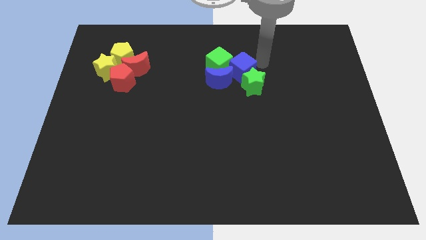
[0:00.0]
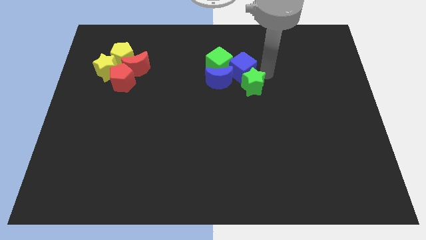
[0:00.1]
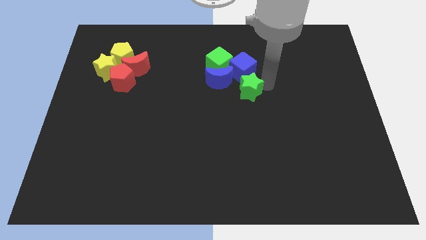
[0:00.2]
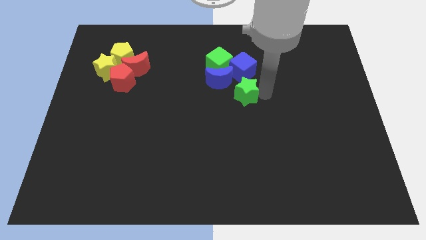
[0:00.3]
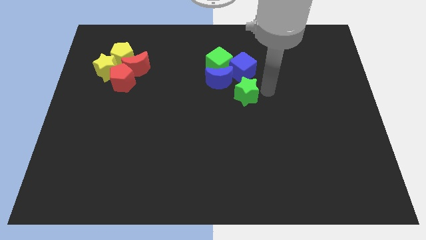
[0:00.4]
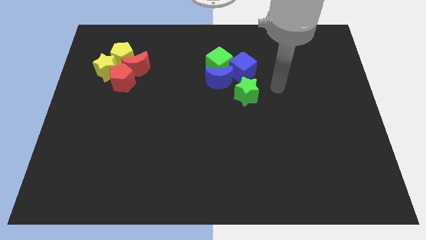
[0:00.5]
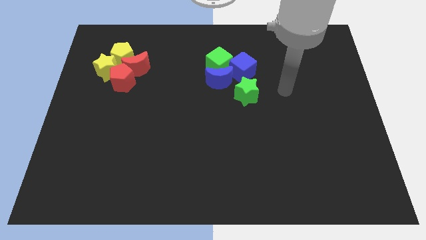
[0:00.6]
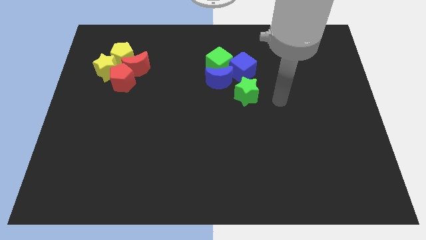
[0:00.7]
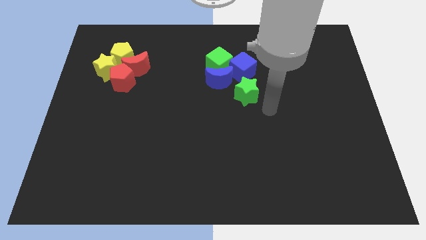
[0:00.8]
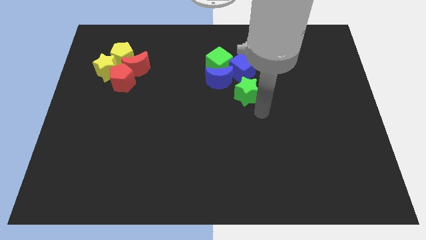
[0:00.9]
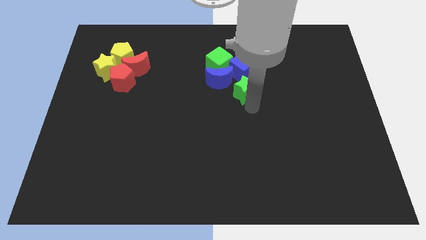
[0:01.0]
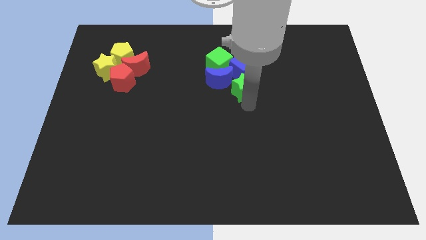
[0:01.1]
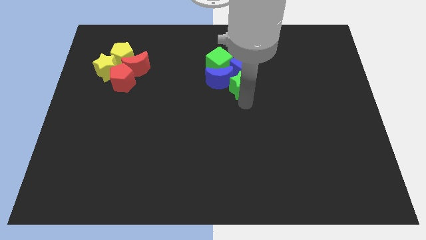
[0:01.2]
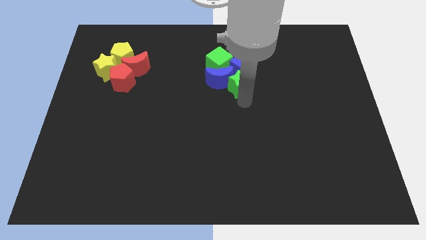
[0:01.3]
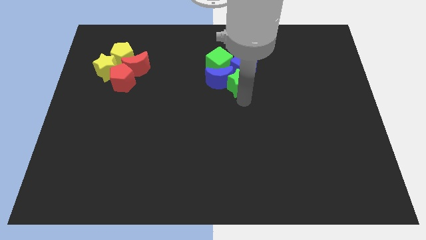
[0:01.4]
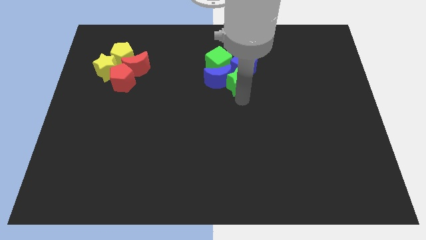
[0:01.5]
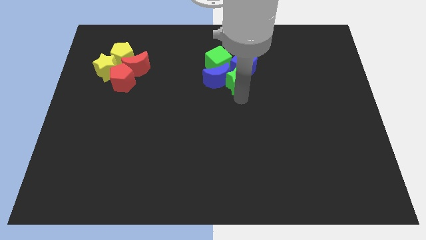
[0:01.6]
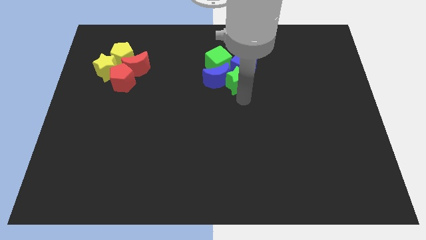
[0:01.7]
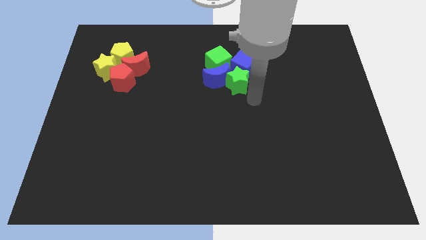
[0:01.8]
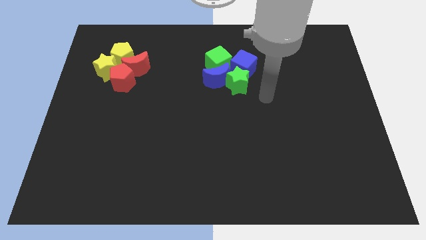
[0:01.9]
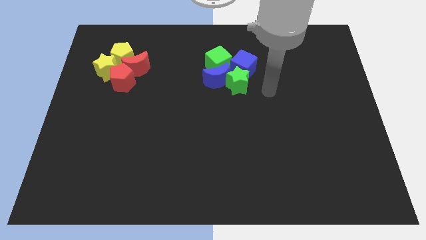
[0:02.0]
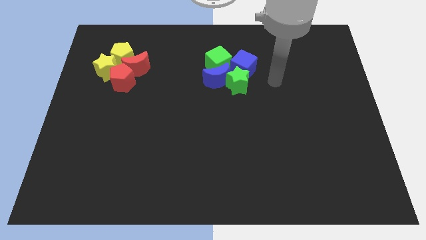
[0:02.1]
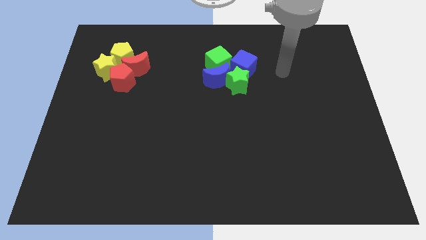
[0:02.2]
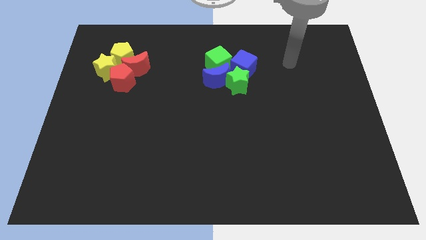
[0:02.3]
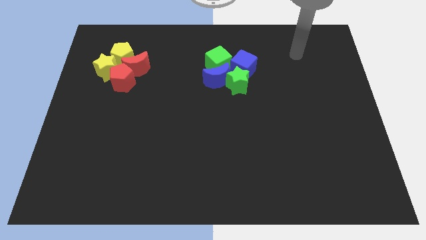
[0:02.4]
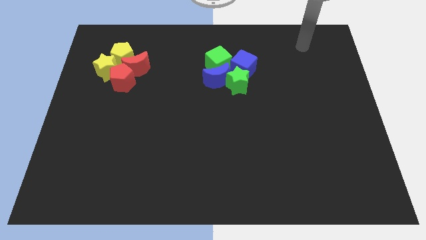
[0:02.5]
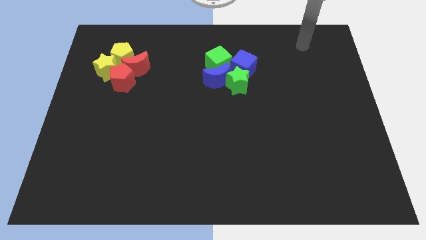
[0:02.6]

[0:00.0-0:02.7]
slightly move the green star to the bottom left of blue cube

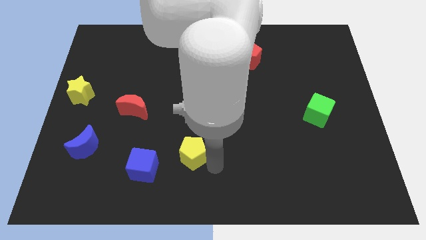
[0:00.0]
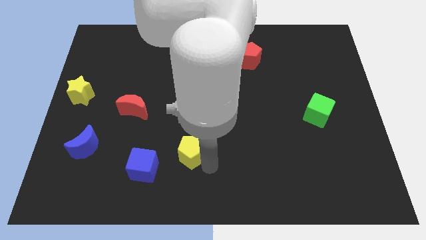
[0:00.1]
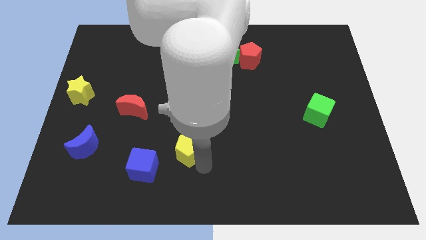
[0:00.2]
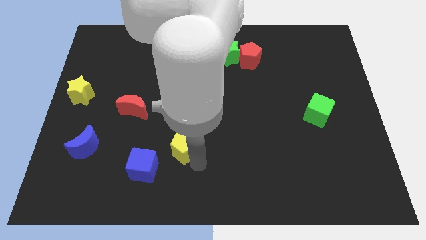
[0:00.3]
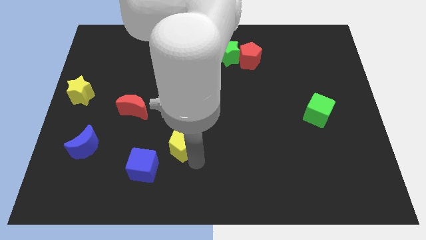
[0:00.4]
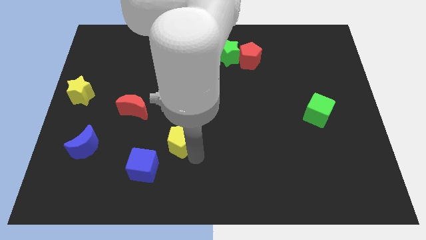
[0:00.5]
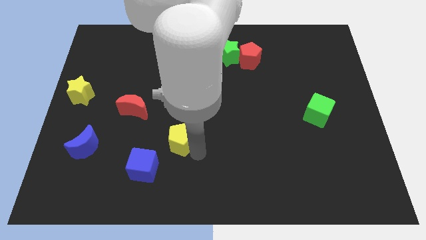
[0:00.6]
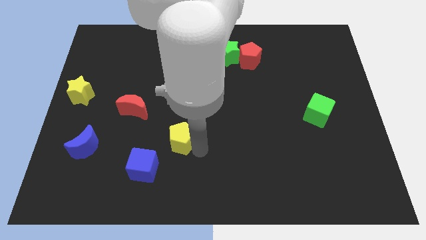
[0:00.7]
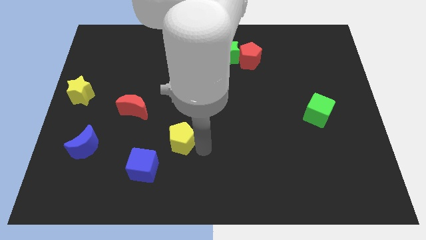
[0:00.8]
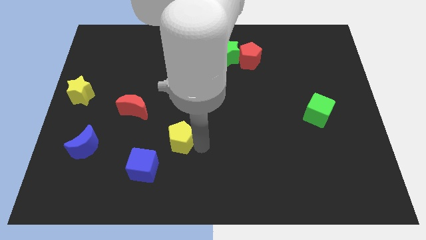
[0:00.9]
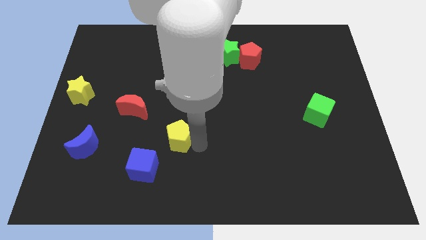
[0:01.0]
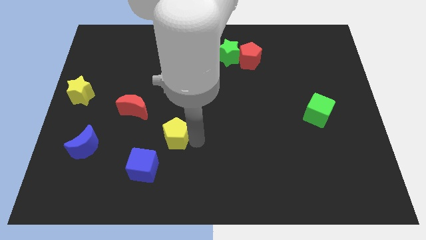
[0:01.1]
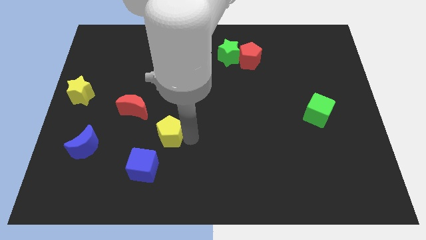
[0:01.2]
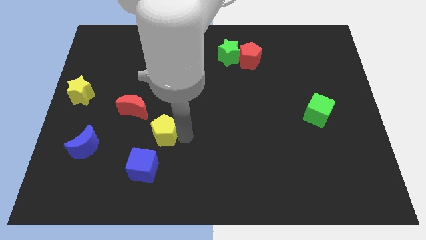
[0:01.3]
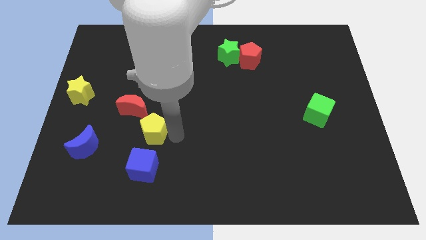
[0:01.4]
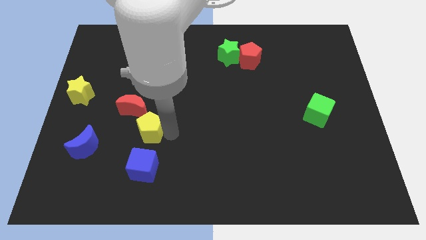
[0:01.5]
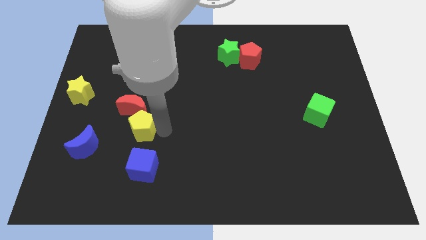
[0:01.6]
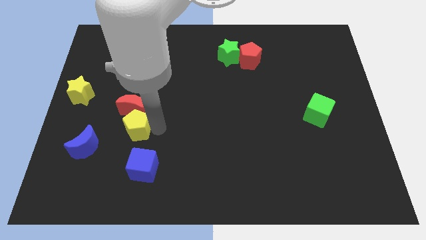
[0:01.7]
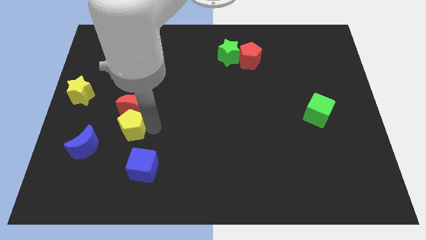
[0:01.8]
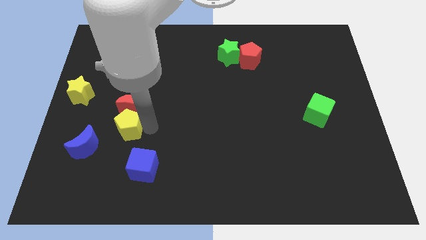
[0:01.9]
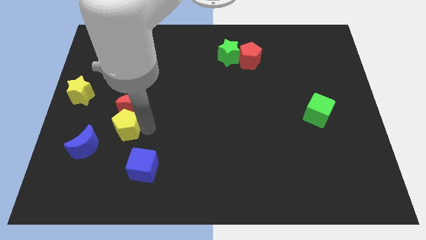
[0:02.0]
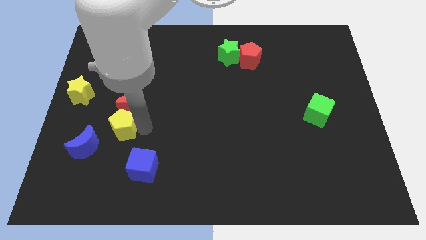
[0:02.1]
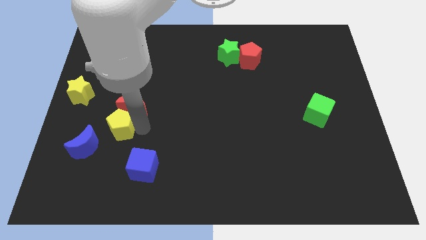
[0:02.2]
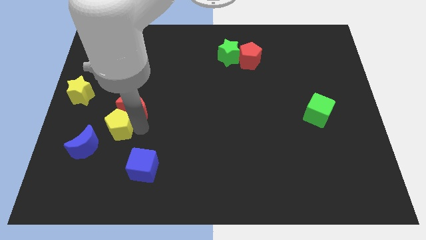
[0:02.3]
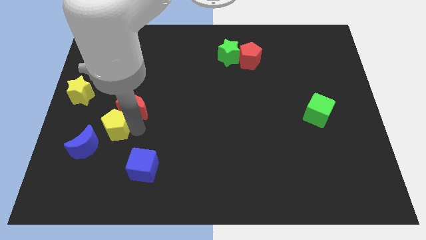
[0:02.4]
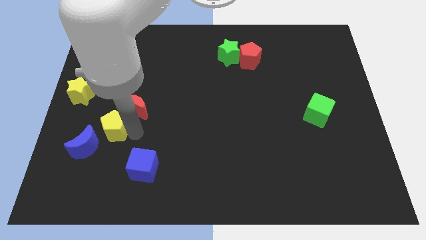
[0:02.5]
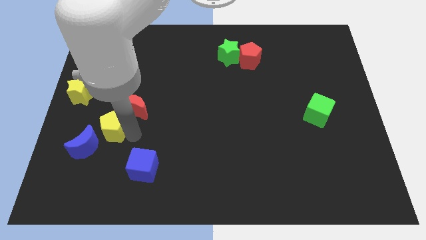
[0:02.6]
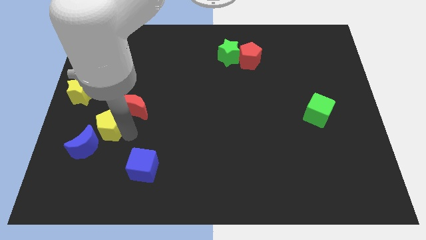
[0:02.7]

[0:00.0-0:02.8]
put the yellow pentagon in between the moons

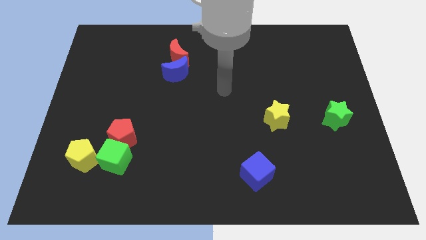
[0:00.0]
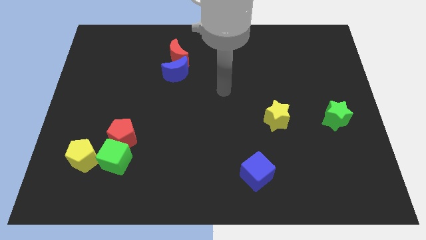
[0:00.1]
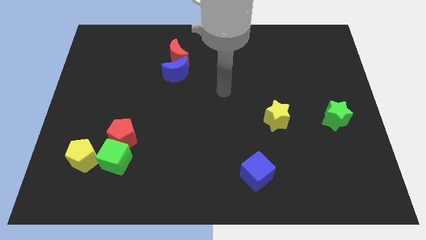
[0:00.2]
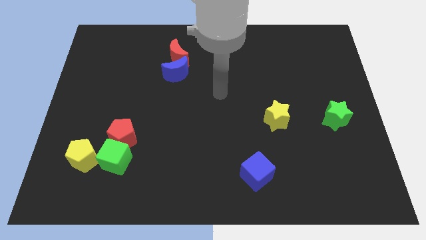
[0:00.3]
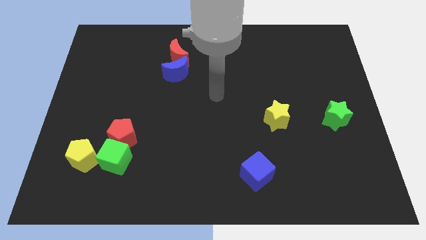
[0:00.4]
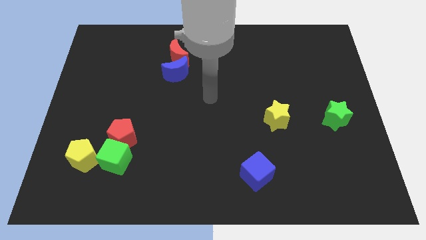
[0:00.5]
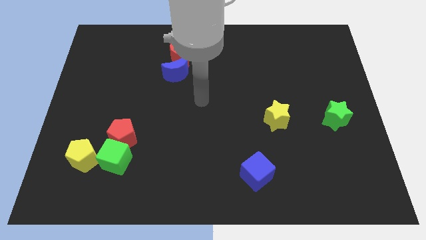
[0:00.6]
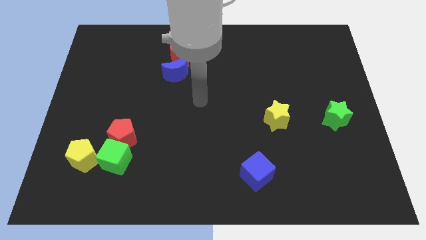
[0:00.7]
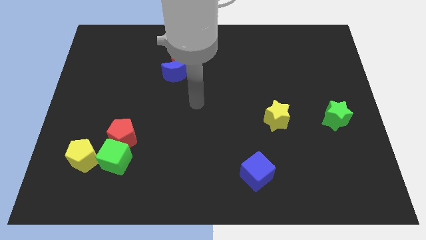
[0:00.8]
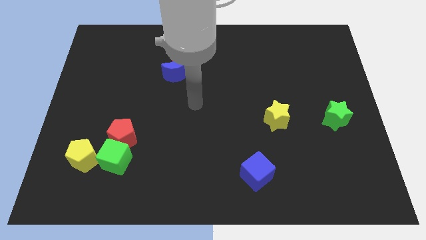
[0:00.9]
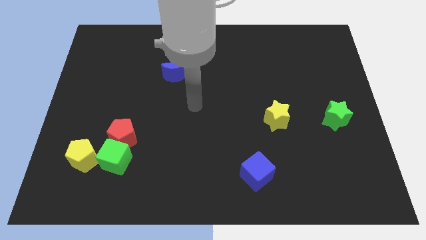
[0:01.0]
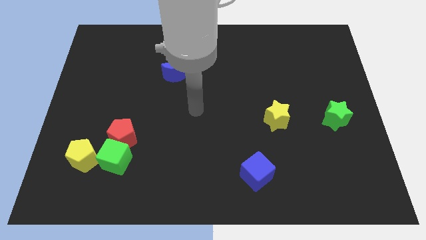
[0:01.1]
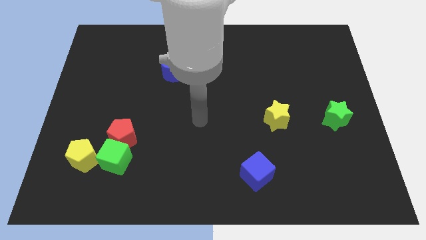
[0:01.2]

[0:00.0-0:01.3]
put your hand in between the blue moon and blue cube

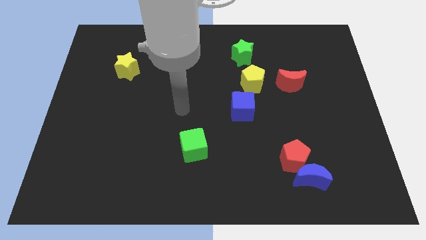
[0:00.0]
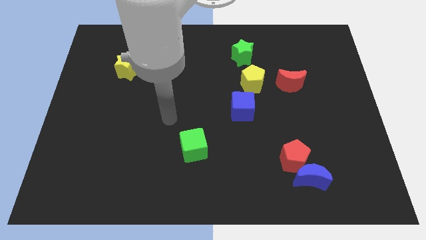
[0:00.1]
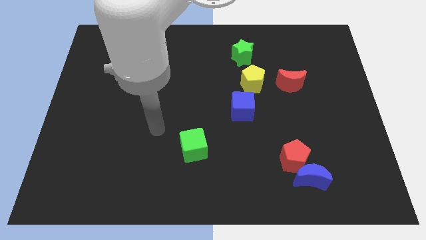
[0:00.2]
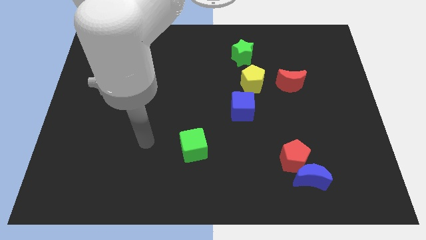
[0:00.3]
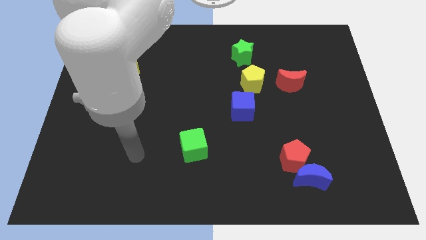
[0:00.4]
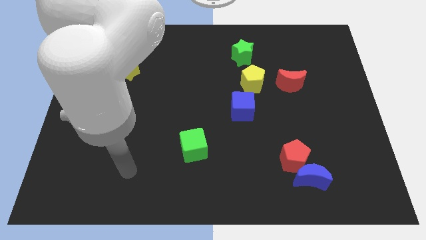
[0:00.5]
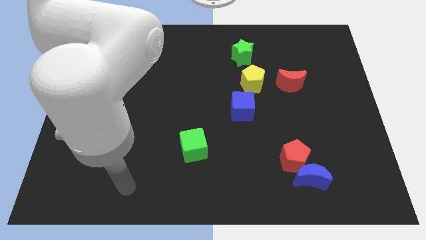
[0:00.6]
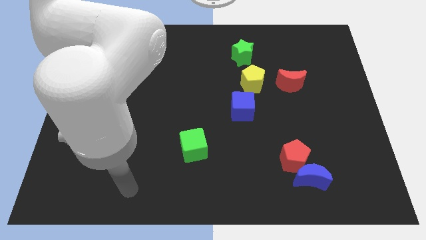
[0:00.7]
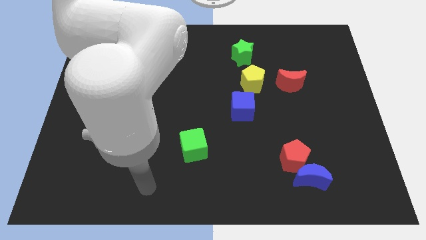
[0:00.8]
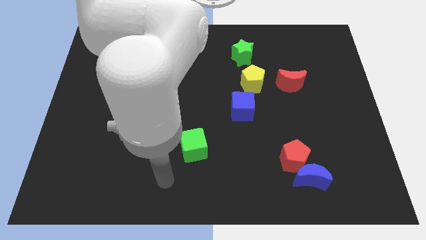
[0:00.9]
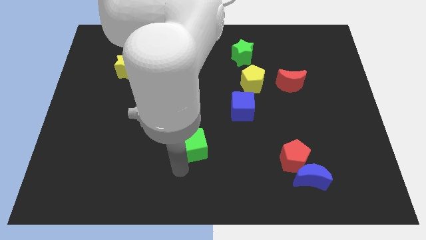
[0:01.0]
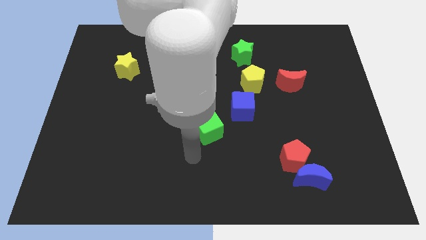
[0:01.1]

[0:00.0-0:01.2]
go near the green cube

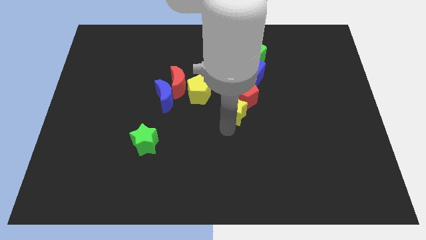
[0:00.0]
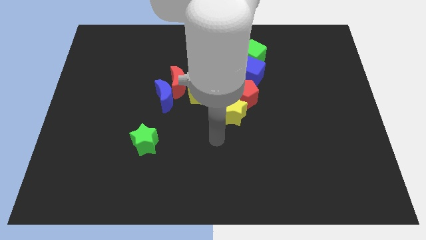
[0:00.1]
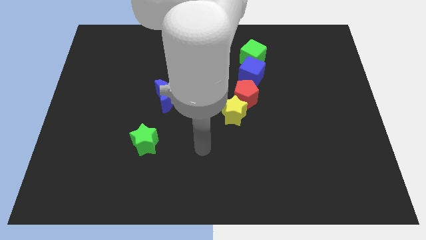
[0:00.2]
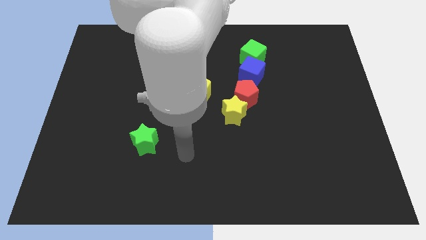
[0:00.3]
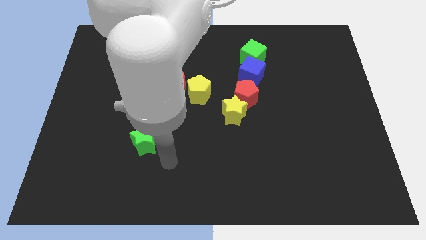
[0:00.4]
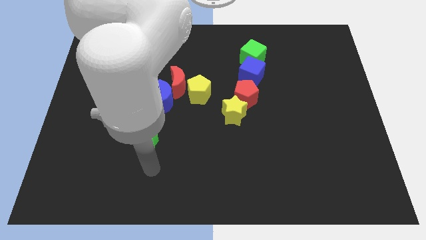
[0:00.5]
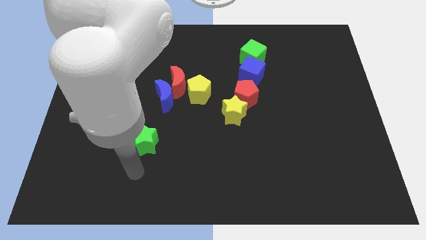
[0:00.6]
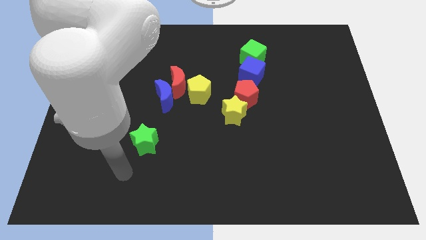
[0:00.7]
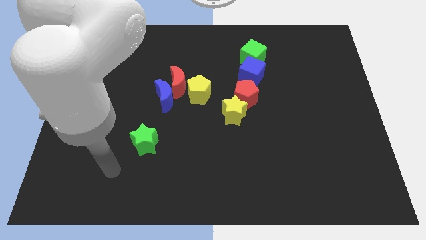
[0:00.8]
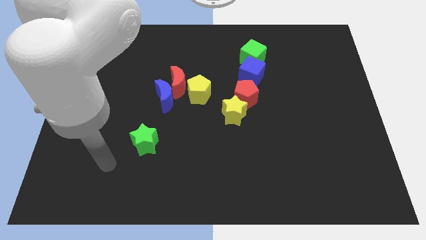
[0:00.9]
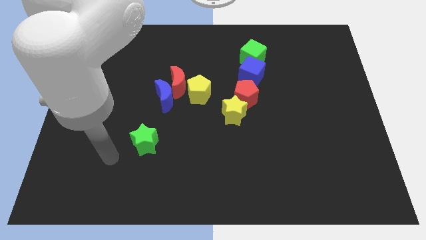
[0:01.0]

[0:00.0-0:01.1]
move your arm away from the yellow star
